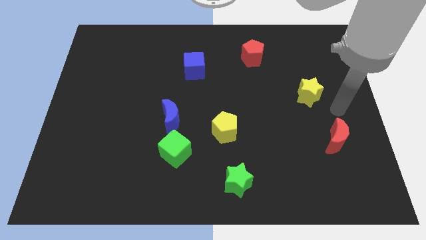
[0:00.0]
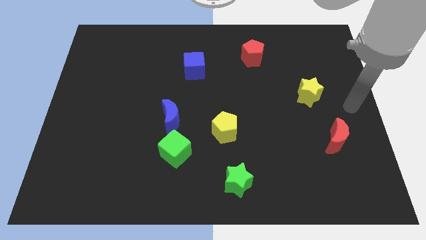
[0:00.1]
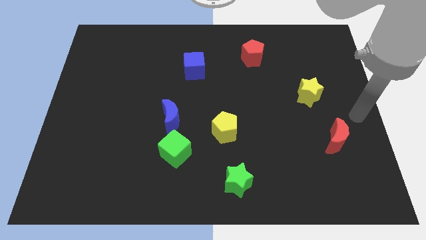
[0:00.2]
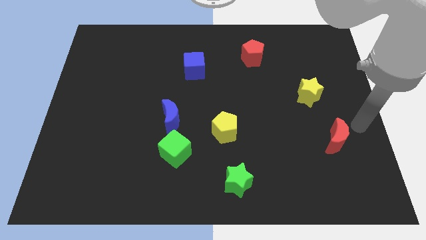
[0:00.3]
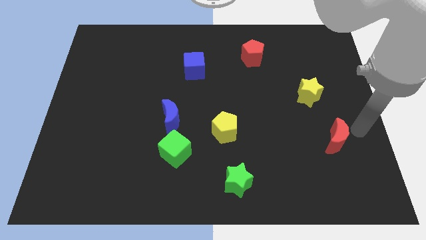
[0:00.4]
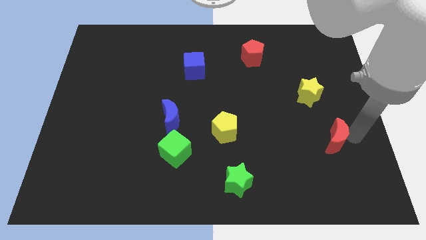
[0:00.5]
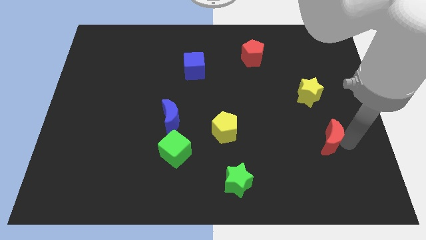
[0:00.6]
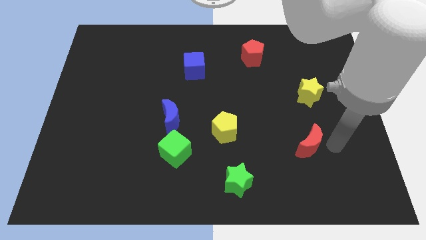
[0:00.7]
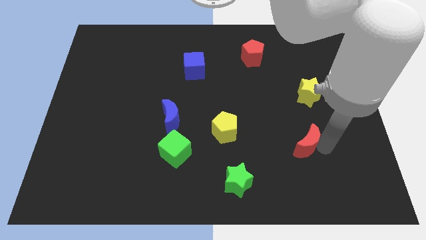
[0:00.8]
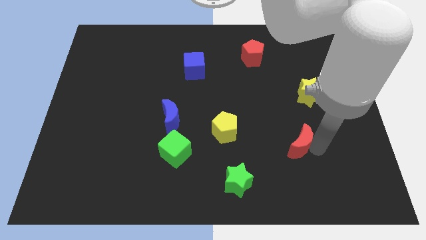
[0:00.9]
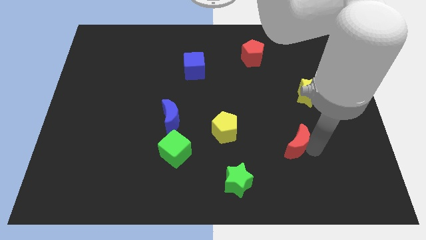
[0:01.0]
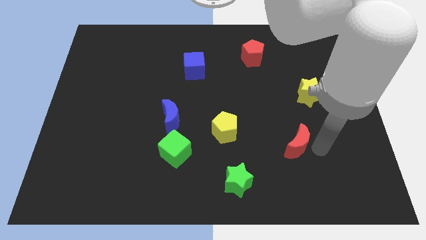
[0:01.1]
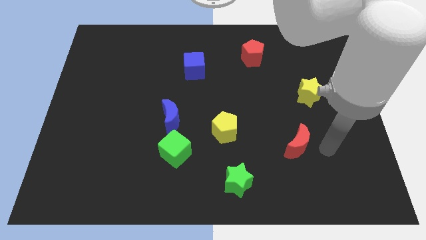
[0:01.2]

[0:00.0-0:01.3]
put the red moon diagonally bottom left to the yellow star

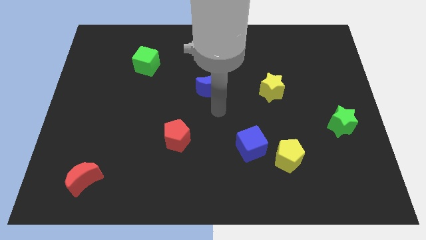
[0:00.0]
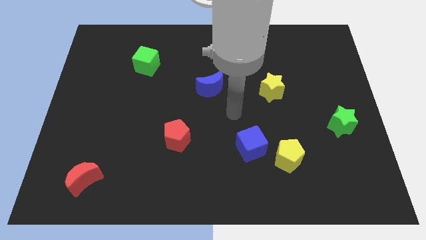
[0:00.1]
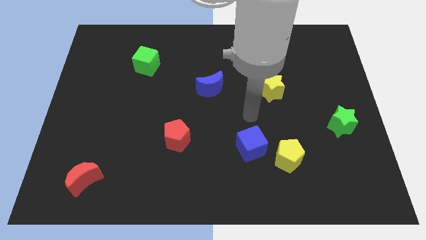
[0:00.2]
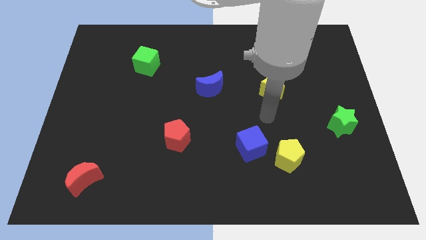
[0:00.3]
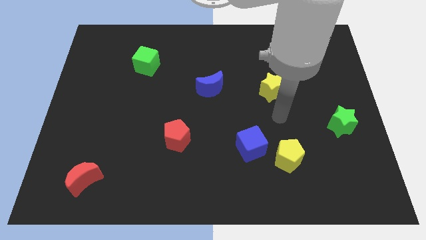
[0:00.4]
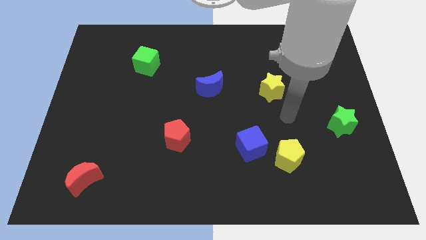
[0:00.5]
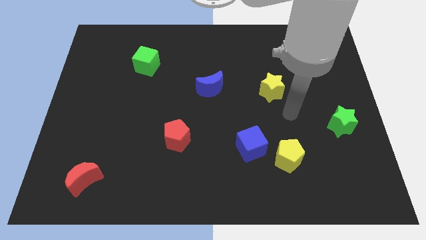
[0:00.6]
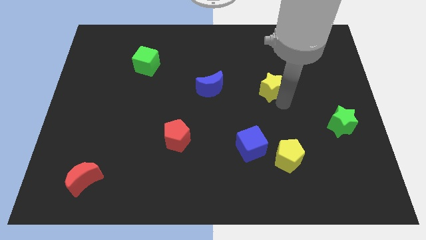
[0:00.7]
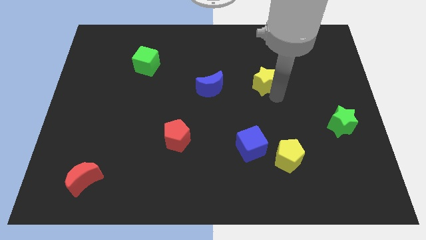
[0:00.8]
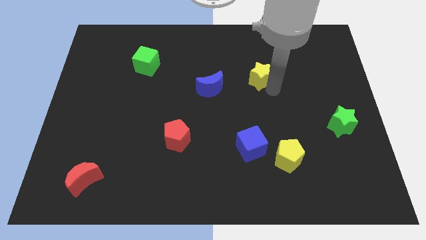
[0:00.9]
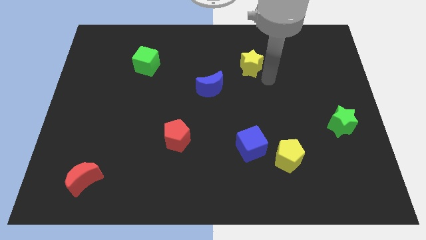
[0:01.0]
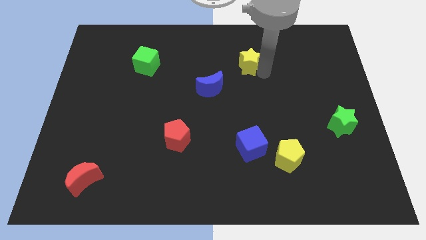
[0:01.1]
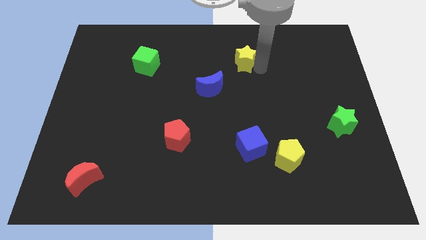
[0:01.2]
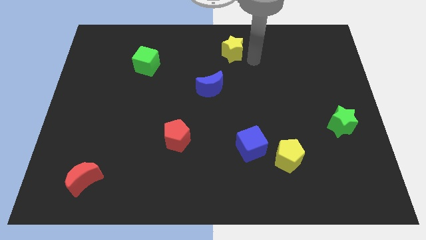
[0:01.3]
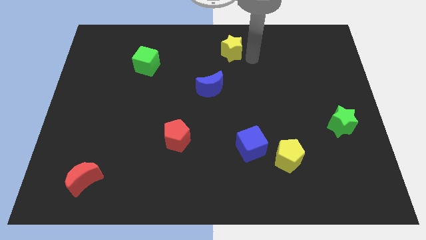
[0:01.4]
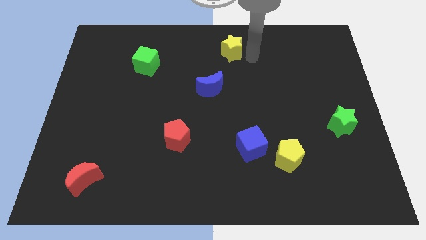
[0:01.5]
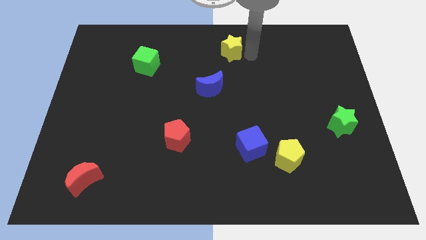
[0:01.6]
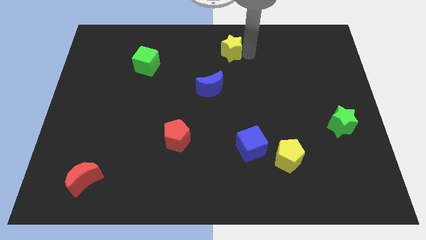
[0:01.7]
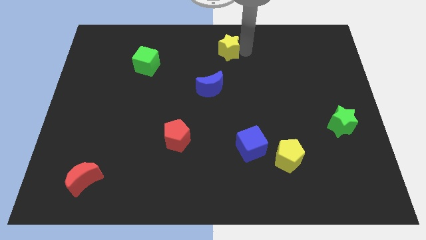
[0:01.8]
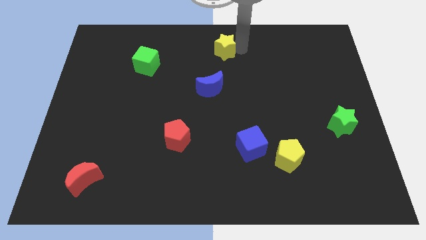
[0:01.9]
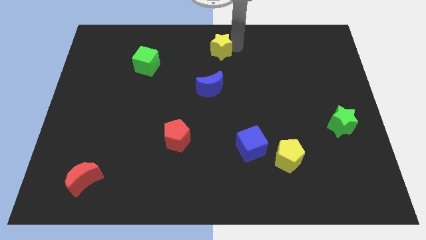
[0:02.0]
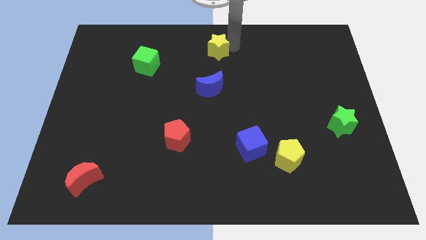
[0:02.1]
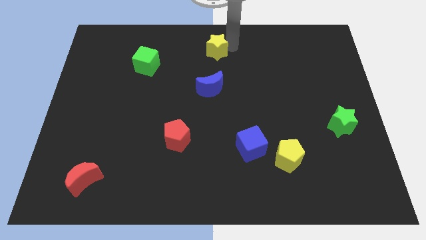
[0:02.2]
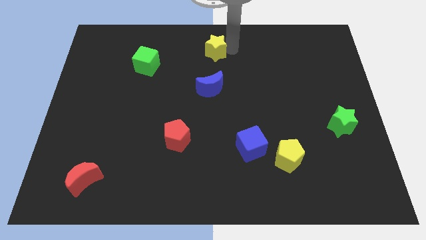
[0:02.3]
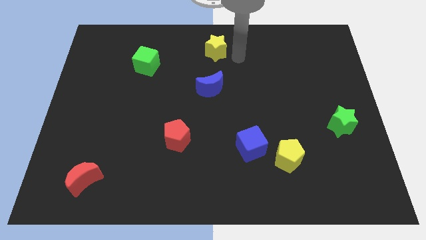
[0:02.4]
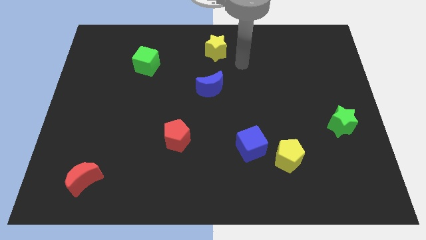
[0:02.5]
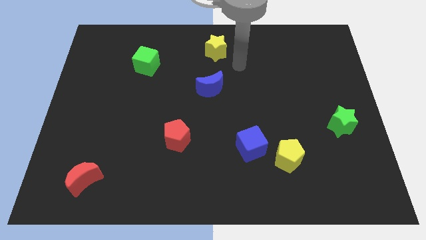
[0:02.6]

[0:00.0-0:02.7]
push the yellow star towards the top of the board

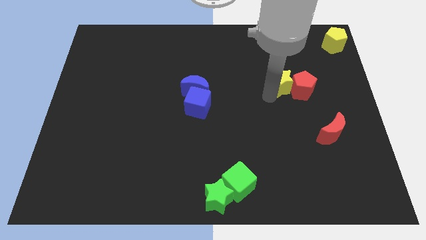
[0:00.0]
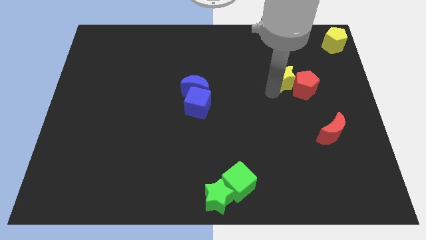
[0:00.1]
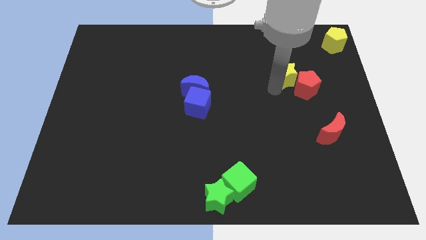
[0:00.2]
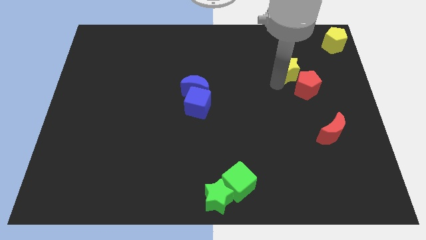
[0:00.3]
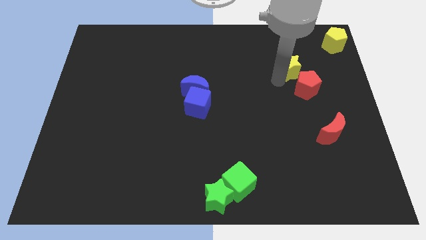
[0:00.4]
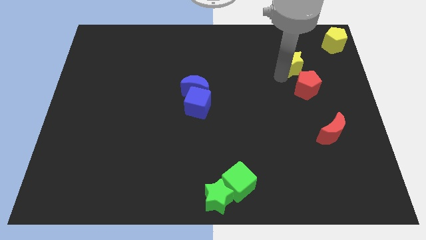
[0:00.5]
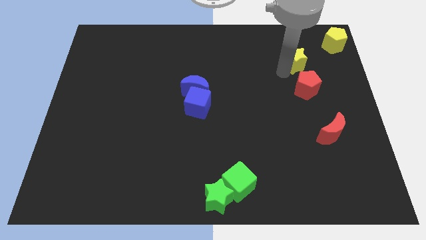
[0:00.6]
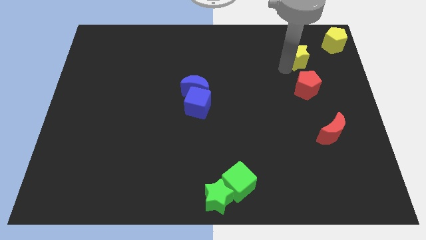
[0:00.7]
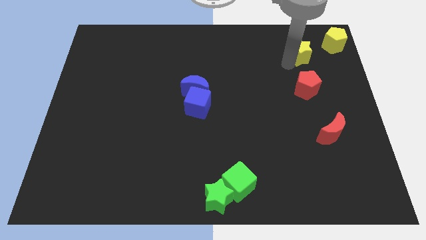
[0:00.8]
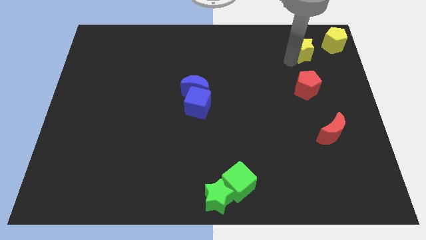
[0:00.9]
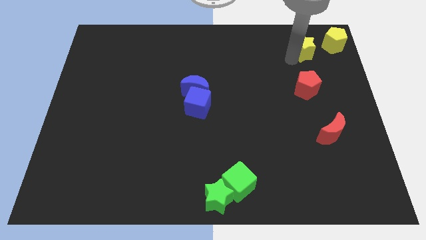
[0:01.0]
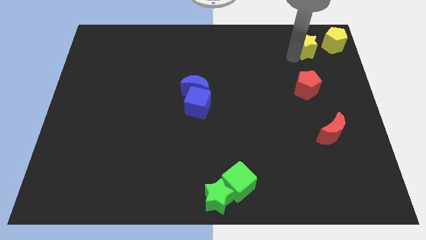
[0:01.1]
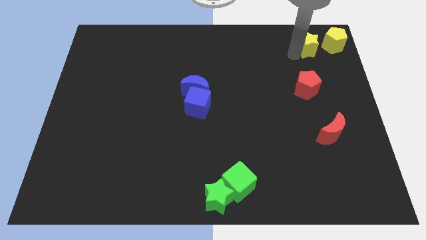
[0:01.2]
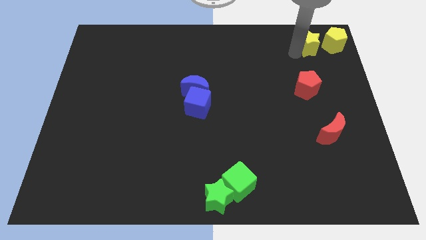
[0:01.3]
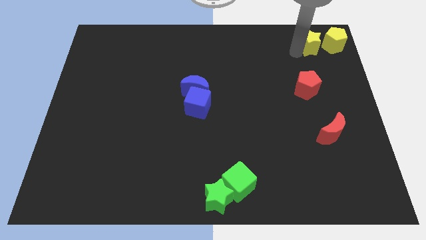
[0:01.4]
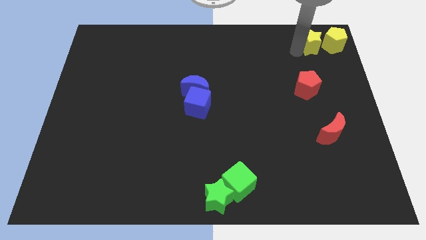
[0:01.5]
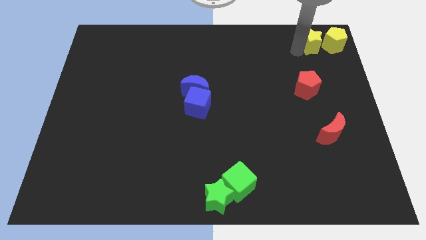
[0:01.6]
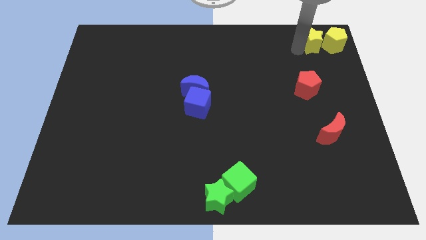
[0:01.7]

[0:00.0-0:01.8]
move the yellow star to the left of the yellow pentagon

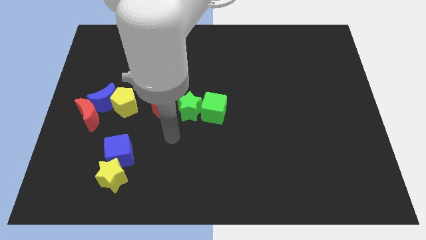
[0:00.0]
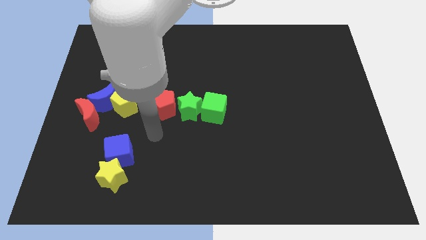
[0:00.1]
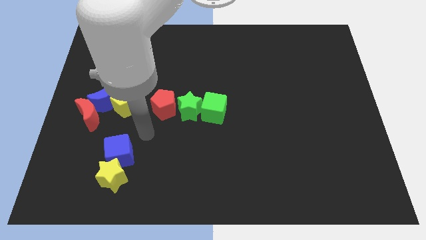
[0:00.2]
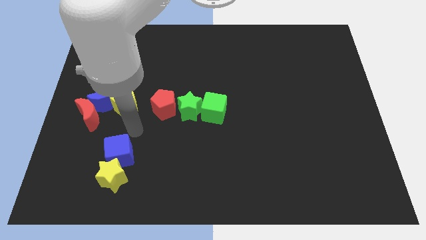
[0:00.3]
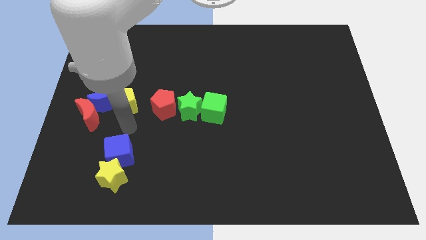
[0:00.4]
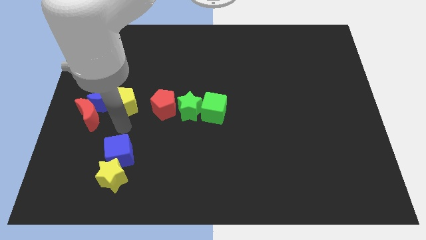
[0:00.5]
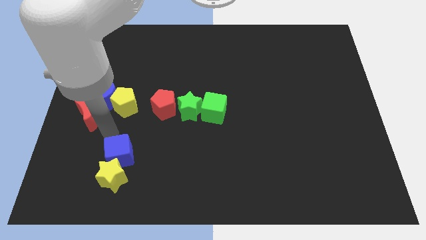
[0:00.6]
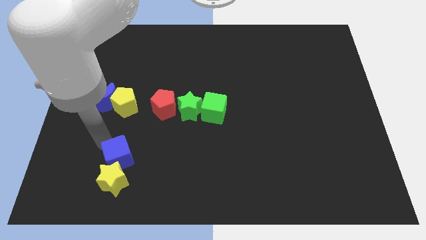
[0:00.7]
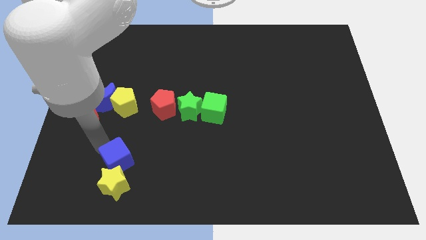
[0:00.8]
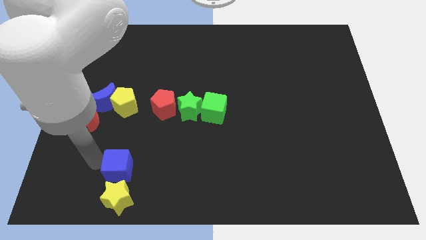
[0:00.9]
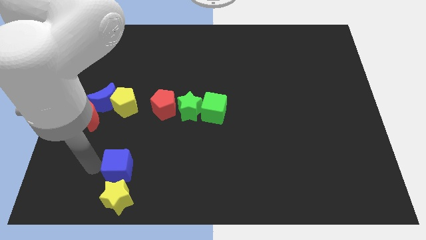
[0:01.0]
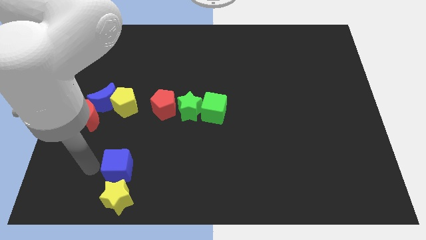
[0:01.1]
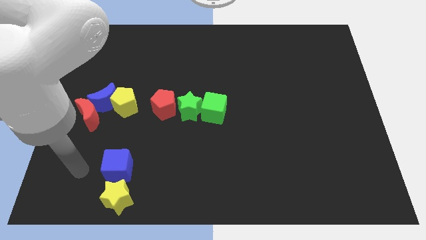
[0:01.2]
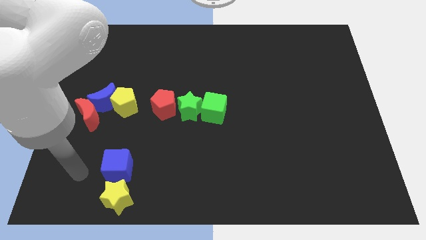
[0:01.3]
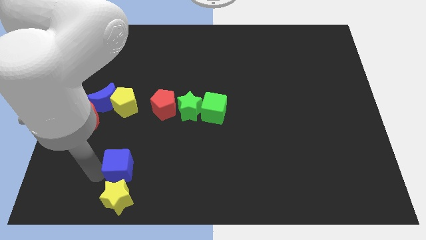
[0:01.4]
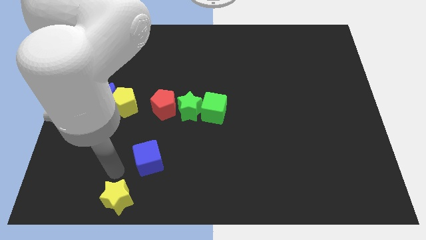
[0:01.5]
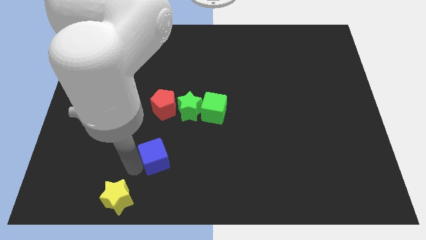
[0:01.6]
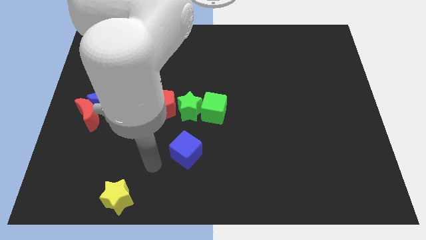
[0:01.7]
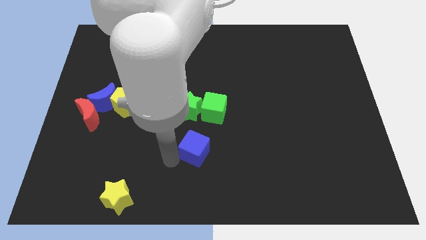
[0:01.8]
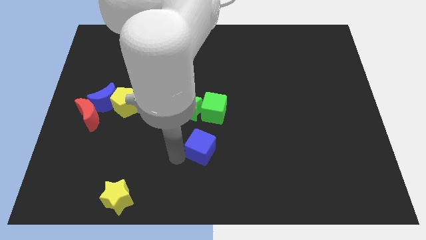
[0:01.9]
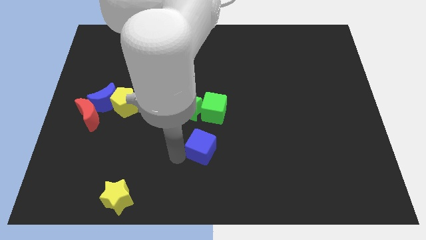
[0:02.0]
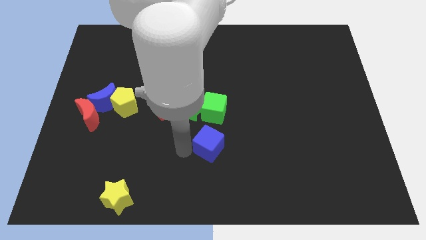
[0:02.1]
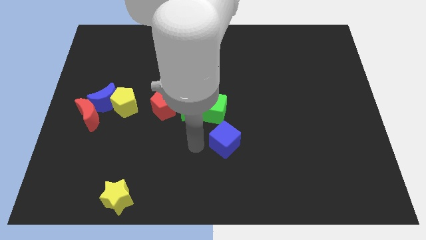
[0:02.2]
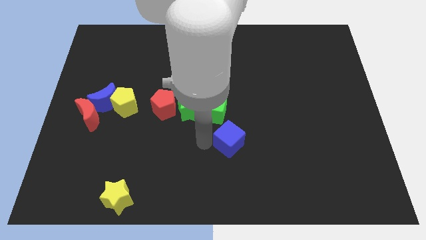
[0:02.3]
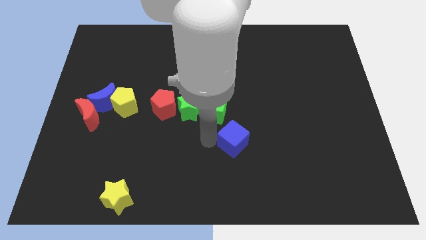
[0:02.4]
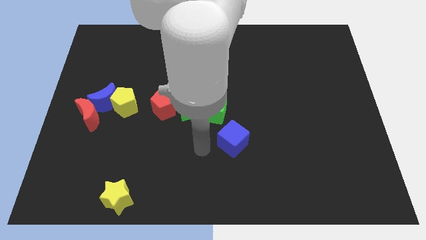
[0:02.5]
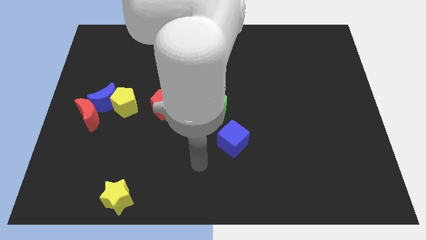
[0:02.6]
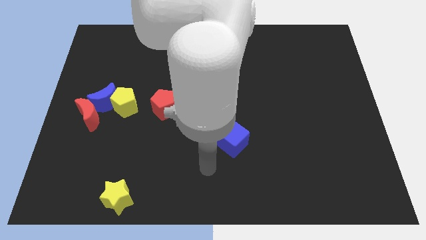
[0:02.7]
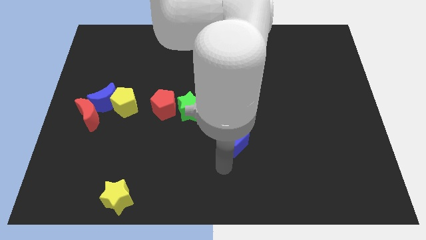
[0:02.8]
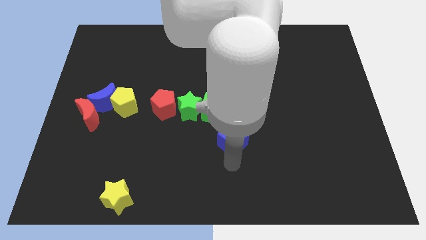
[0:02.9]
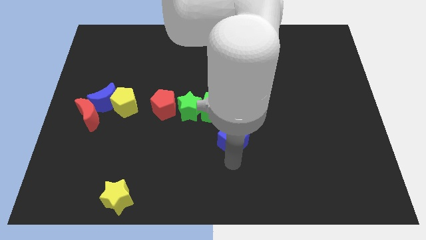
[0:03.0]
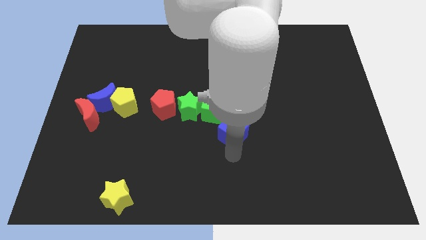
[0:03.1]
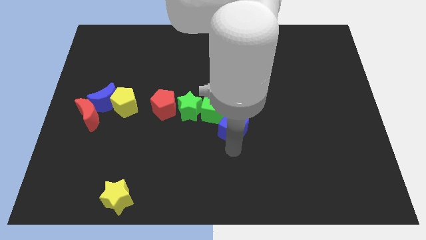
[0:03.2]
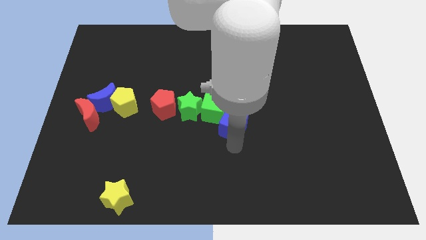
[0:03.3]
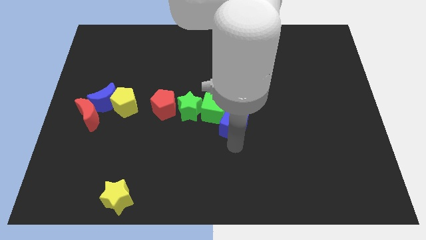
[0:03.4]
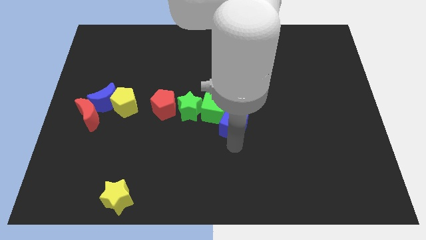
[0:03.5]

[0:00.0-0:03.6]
separate the blue cube and the yellow star
